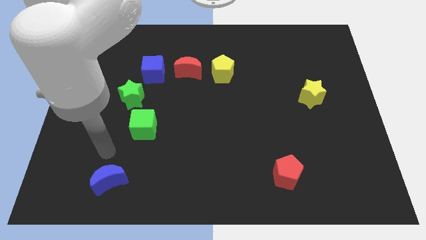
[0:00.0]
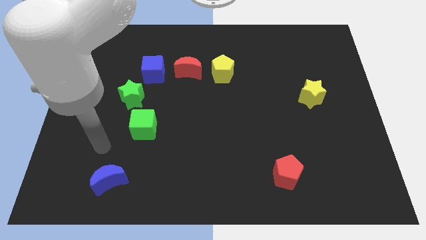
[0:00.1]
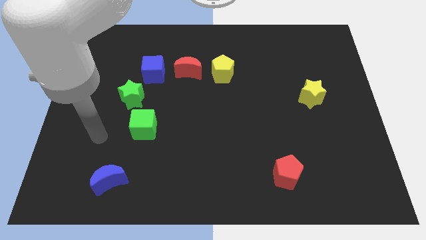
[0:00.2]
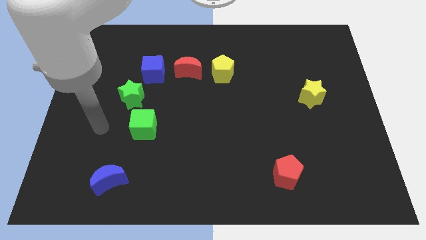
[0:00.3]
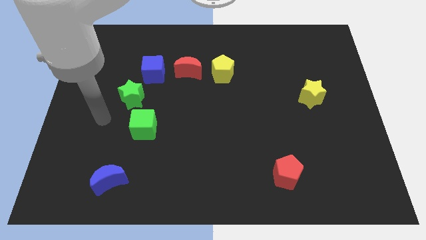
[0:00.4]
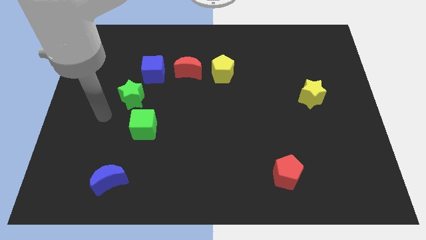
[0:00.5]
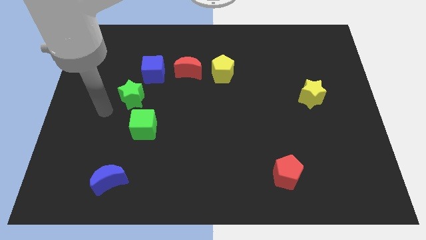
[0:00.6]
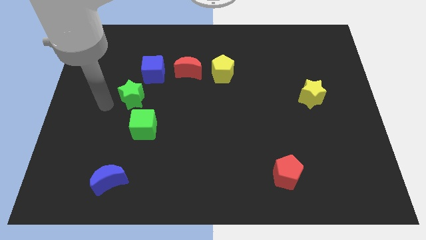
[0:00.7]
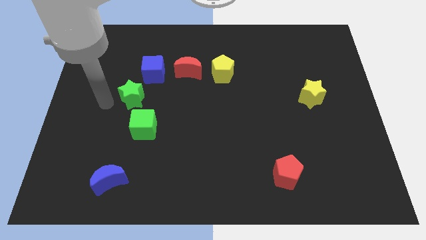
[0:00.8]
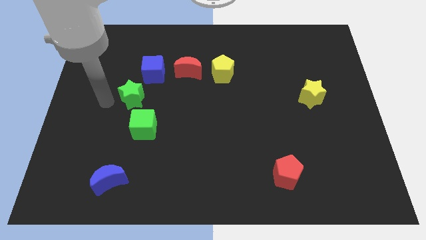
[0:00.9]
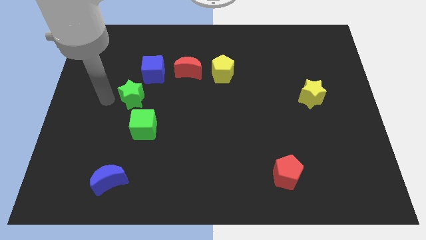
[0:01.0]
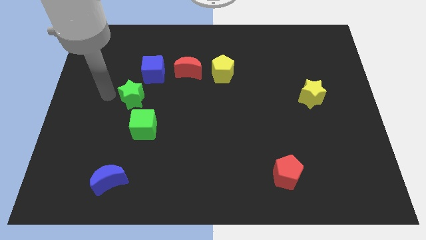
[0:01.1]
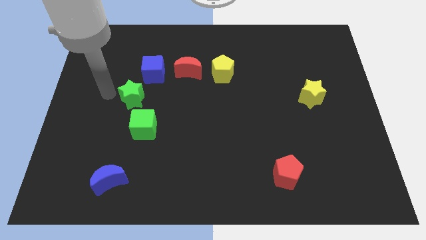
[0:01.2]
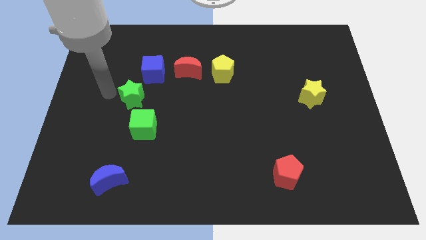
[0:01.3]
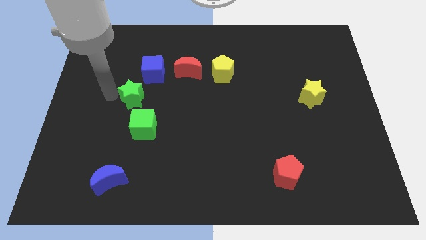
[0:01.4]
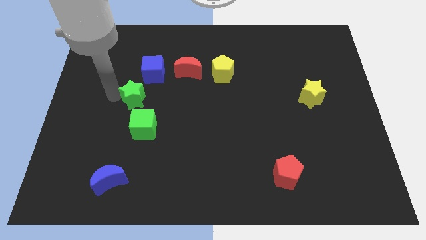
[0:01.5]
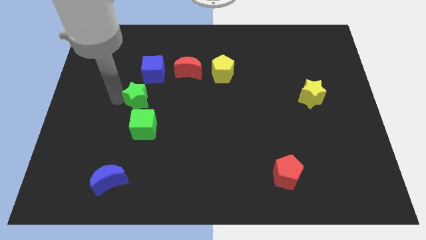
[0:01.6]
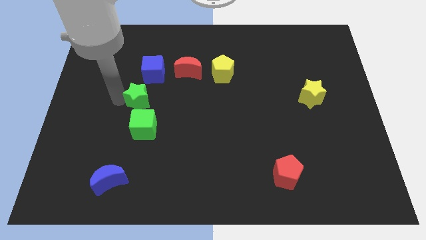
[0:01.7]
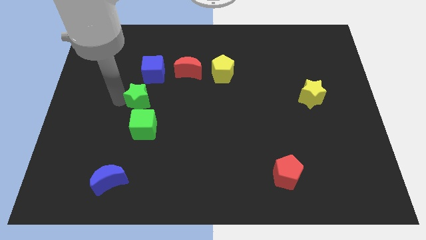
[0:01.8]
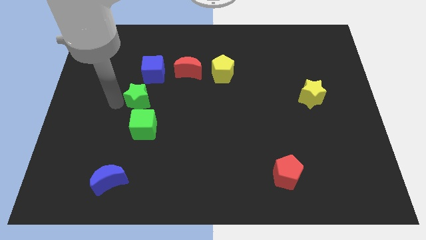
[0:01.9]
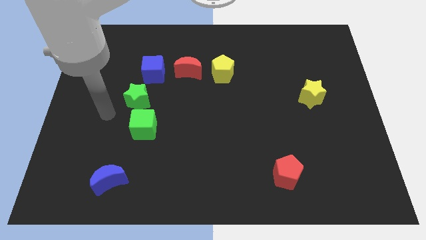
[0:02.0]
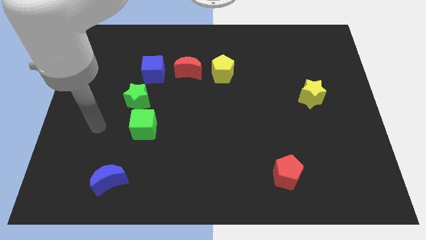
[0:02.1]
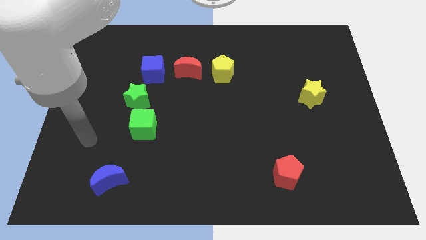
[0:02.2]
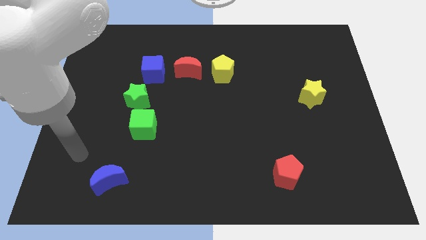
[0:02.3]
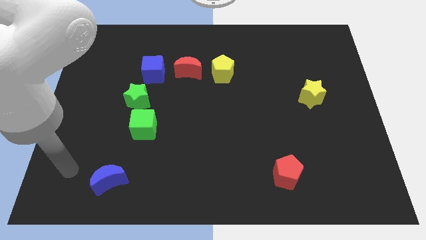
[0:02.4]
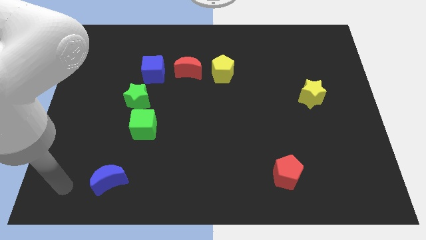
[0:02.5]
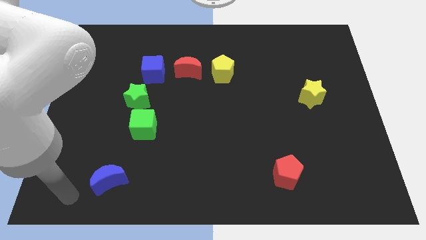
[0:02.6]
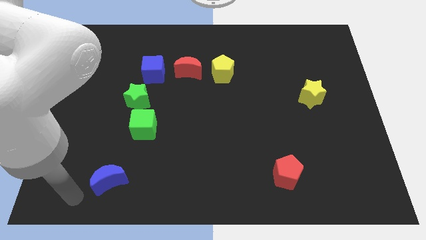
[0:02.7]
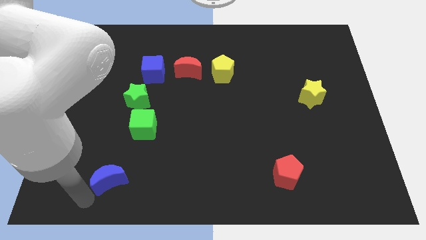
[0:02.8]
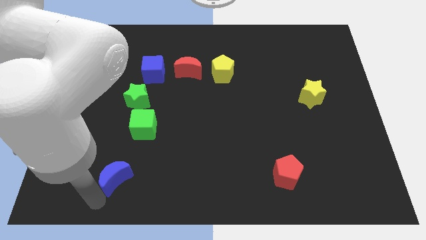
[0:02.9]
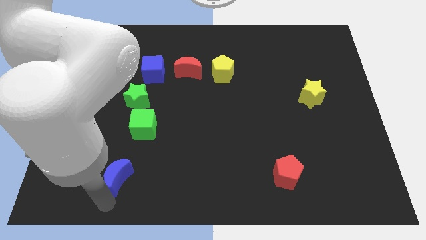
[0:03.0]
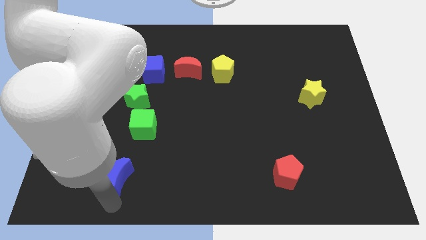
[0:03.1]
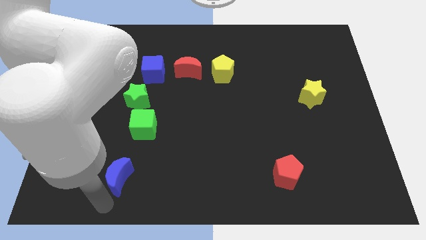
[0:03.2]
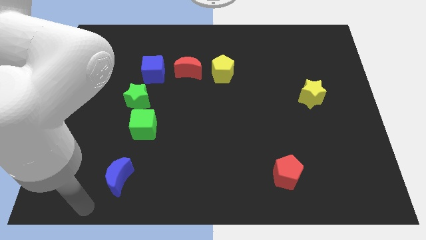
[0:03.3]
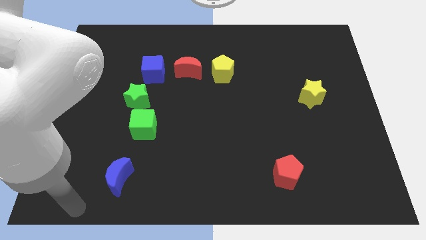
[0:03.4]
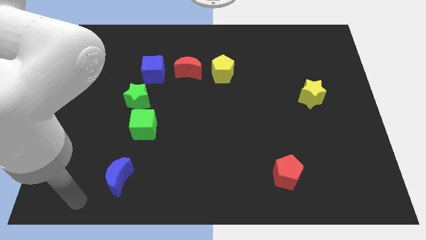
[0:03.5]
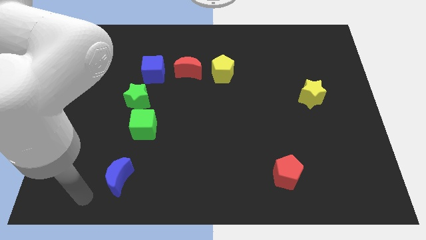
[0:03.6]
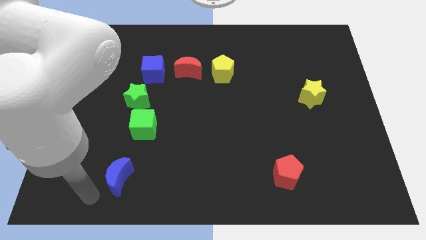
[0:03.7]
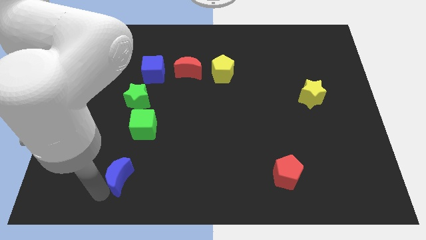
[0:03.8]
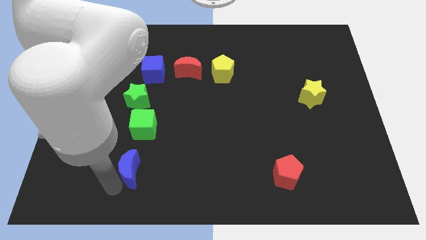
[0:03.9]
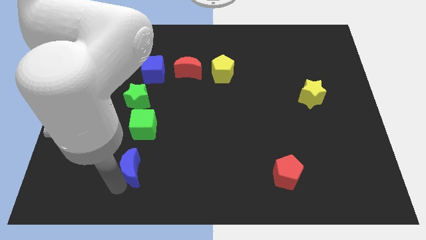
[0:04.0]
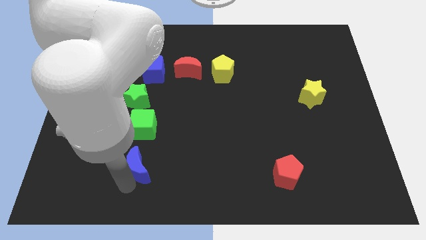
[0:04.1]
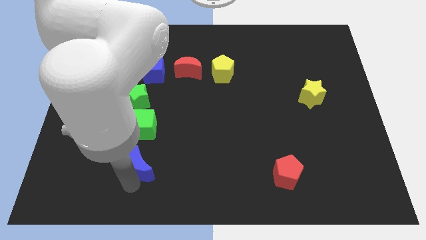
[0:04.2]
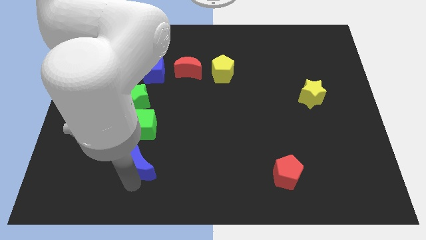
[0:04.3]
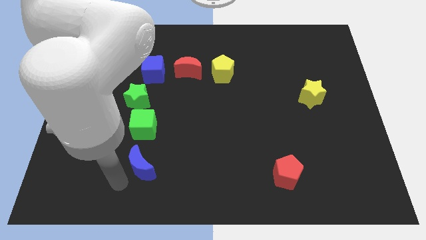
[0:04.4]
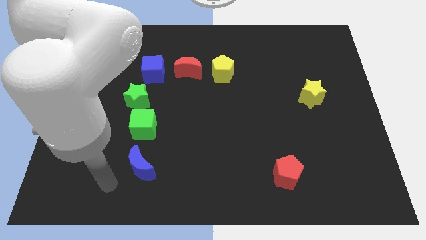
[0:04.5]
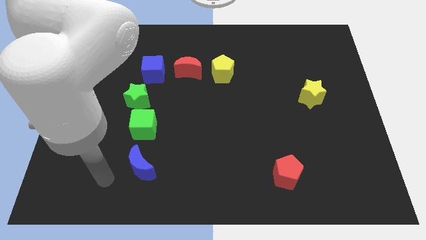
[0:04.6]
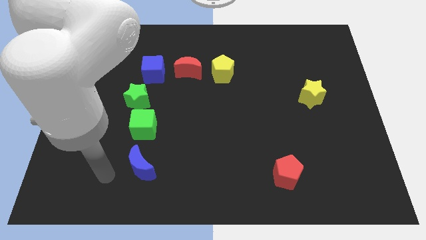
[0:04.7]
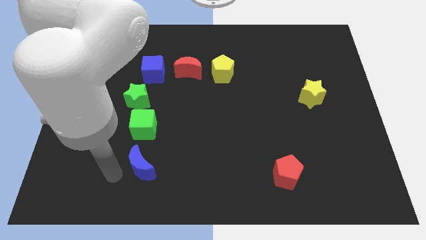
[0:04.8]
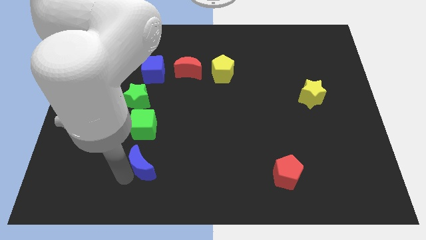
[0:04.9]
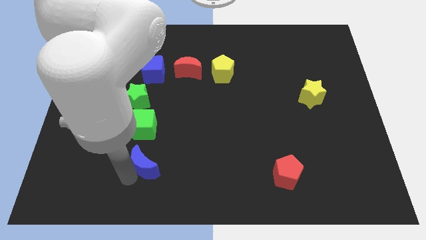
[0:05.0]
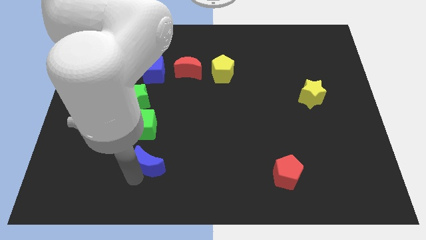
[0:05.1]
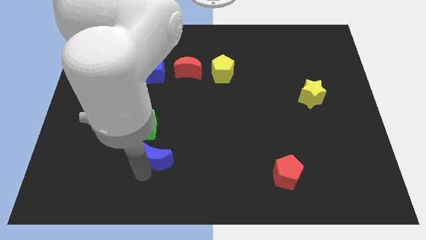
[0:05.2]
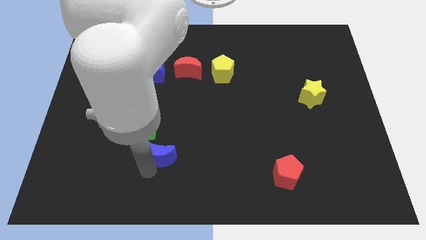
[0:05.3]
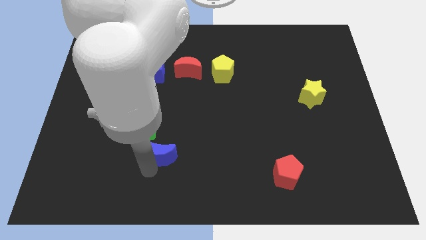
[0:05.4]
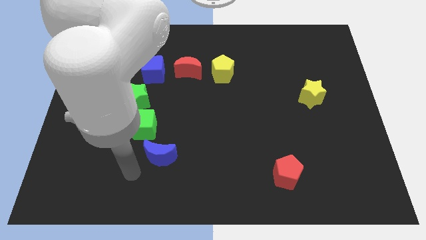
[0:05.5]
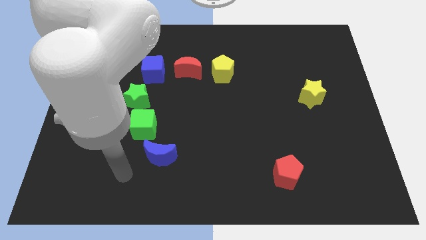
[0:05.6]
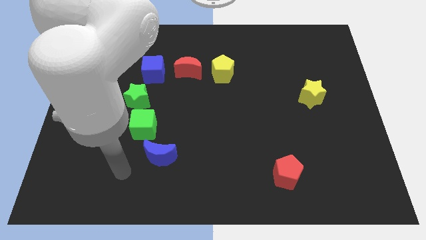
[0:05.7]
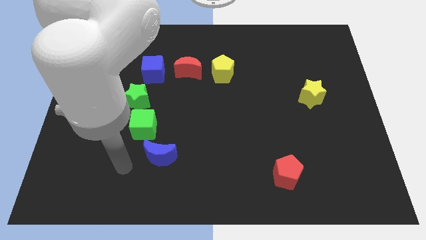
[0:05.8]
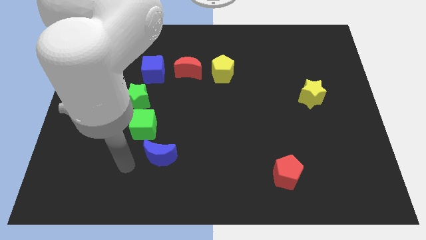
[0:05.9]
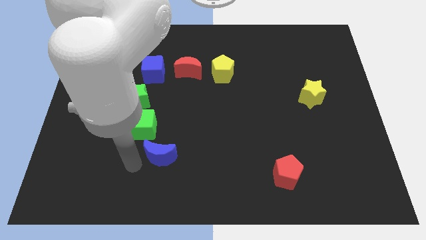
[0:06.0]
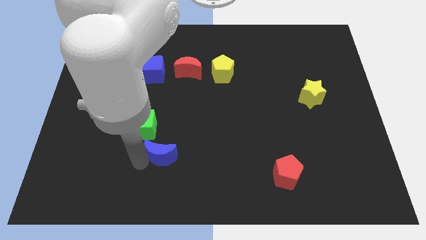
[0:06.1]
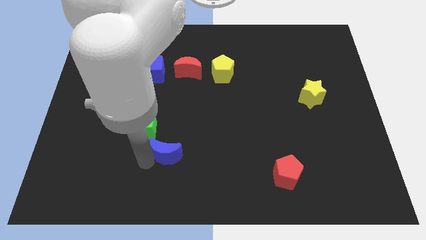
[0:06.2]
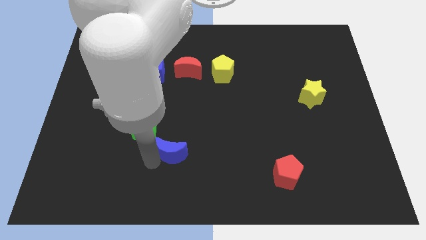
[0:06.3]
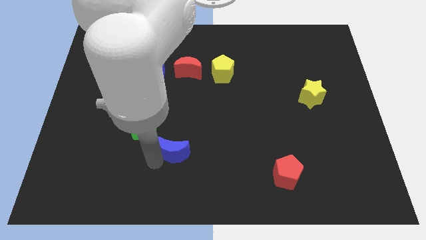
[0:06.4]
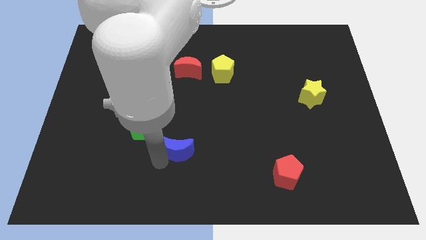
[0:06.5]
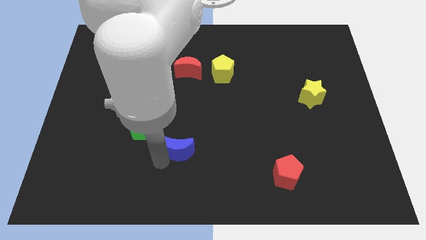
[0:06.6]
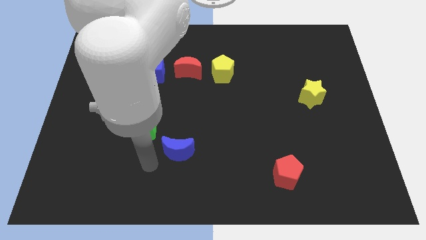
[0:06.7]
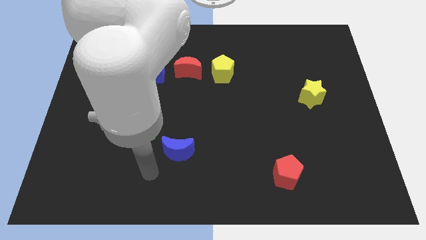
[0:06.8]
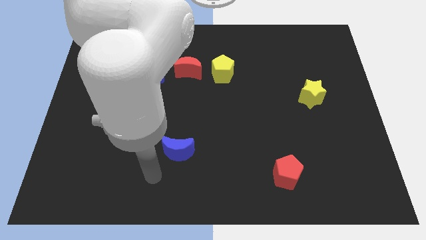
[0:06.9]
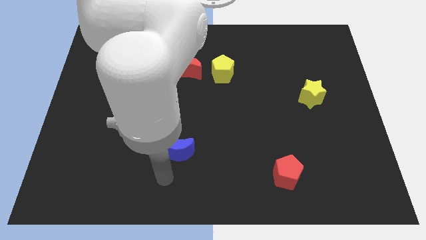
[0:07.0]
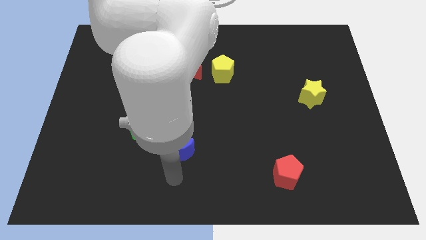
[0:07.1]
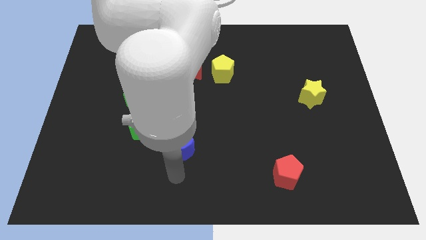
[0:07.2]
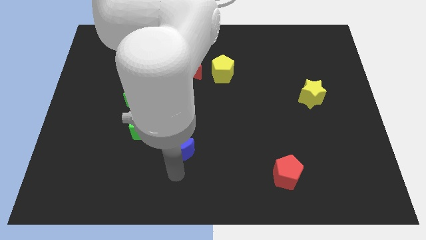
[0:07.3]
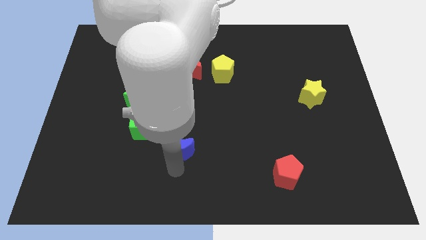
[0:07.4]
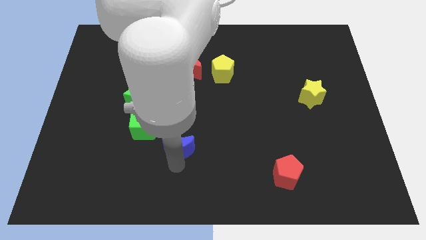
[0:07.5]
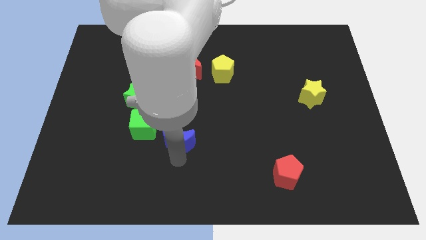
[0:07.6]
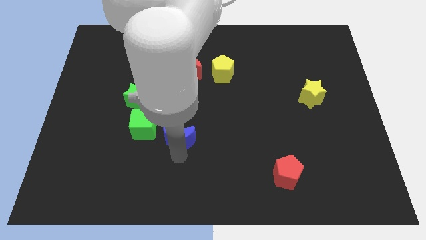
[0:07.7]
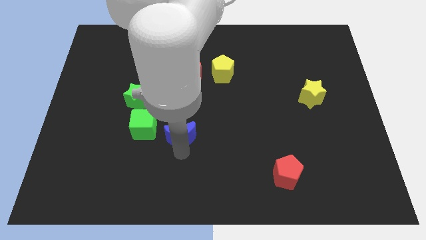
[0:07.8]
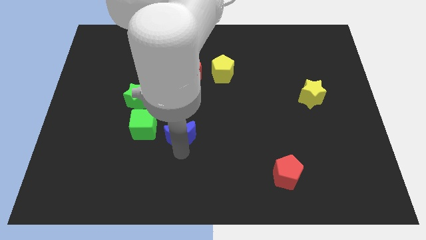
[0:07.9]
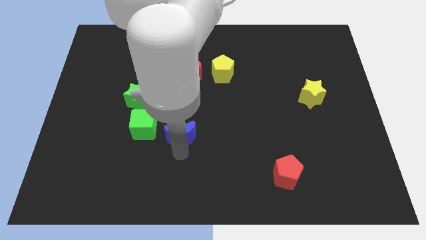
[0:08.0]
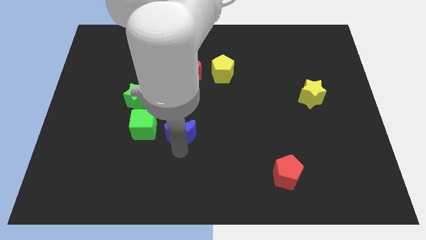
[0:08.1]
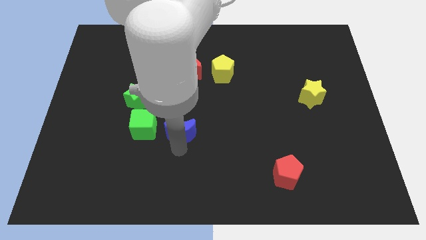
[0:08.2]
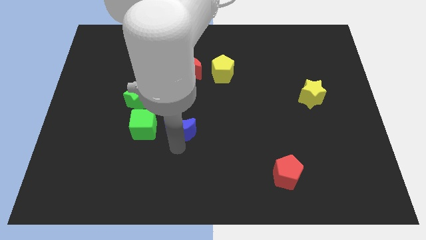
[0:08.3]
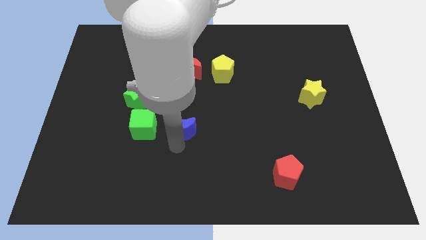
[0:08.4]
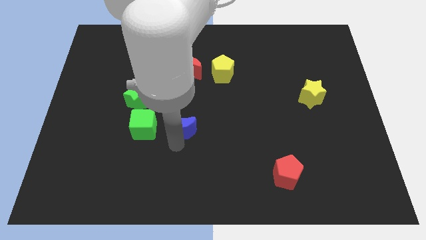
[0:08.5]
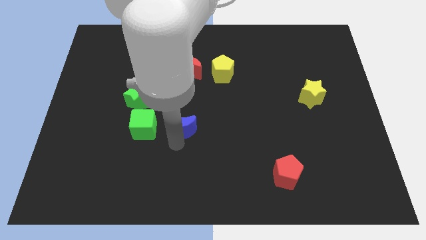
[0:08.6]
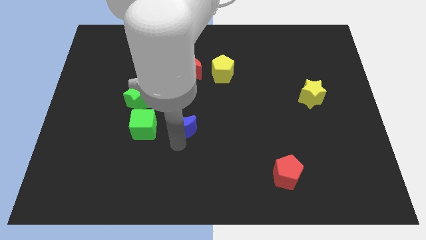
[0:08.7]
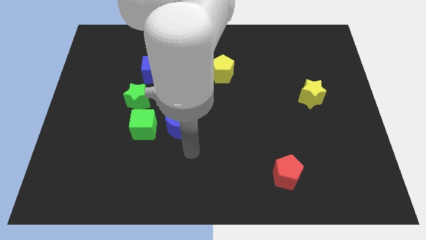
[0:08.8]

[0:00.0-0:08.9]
move the blue moon right beside the green cube

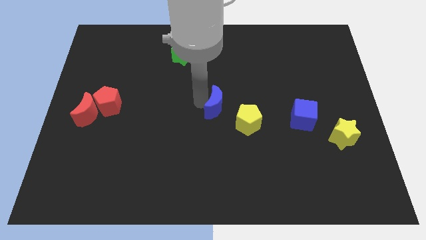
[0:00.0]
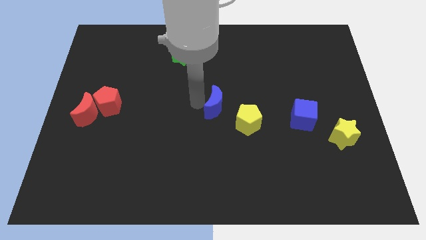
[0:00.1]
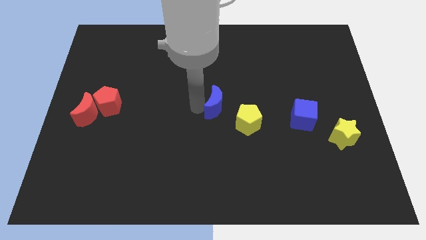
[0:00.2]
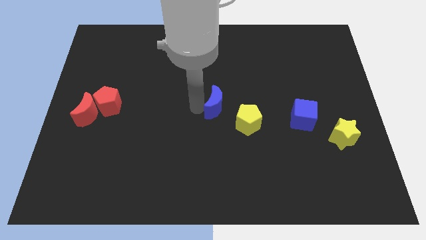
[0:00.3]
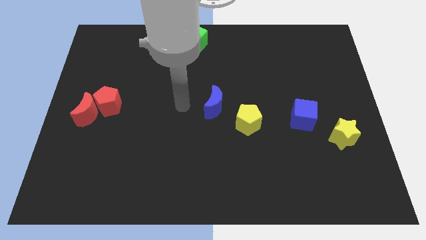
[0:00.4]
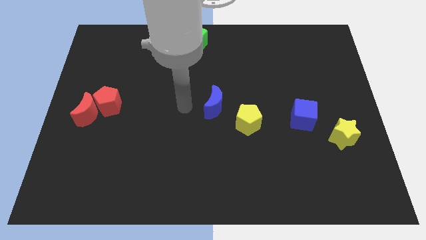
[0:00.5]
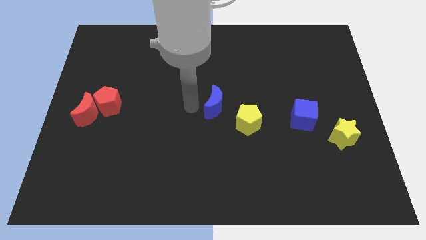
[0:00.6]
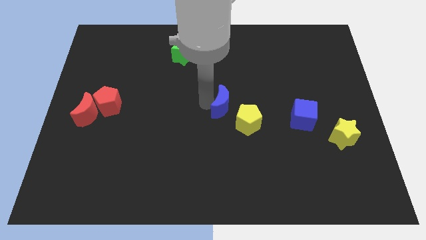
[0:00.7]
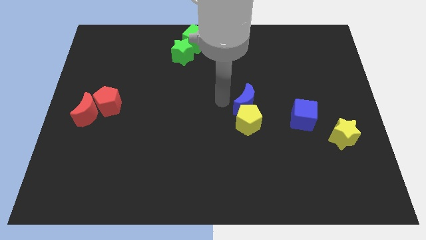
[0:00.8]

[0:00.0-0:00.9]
push the blue crescent into the yellow pentagon
